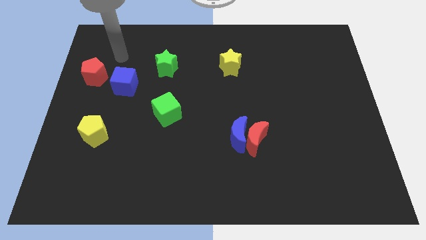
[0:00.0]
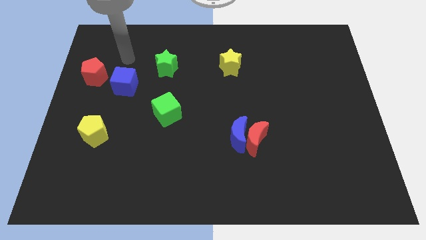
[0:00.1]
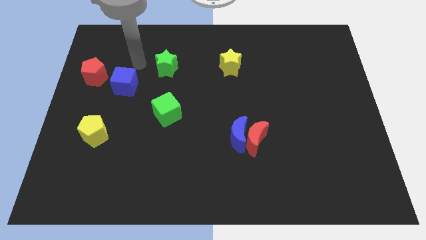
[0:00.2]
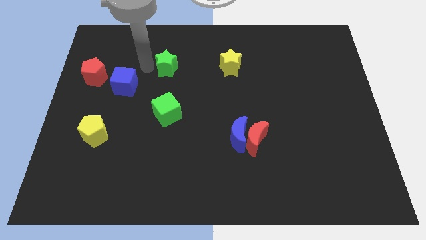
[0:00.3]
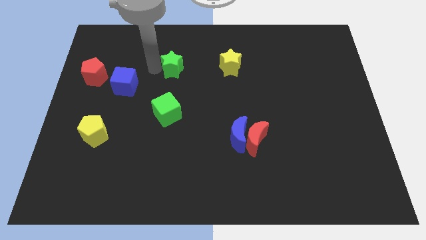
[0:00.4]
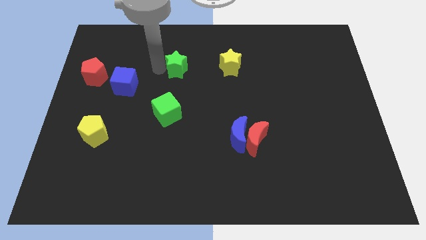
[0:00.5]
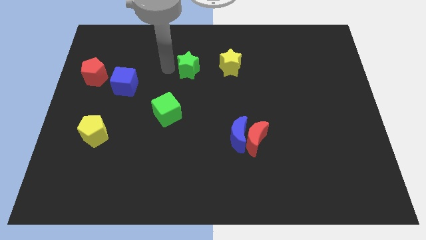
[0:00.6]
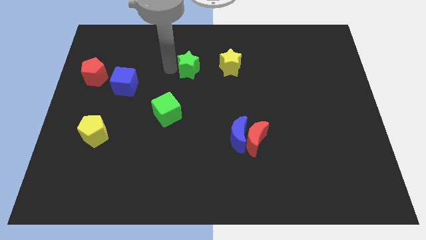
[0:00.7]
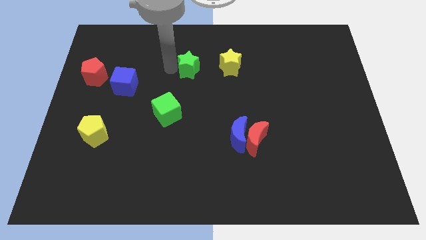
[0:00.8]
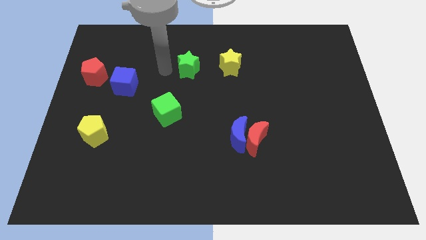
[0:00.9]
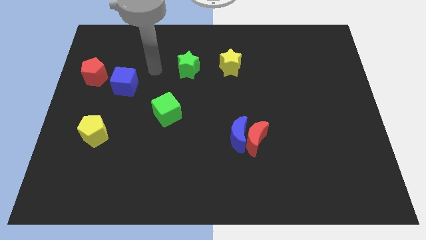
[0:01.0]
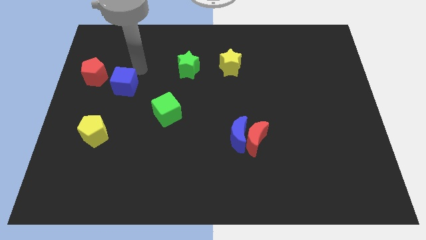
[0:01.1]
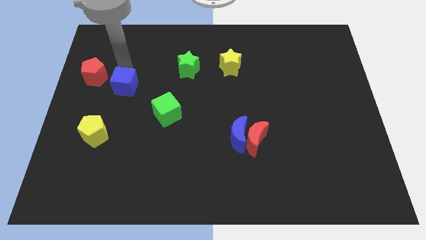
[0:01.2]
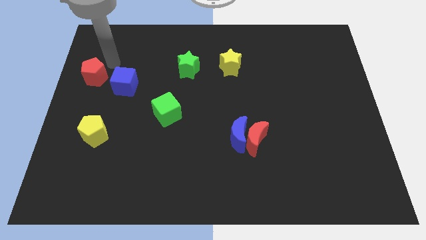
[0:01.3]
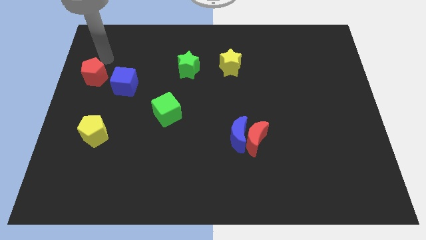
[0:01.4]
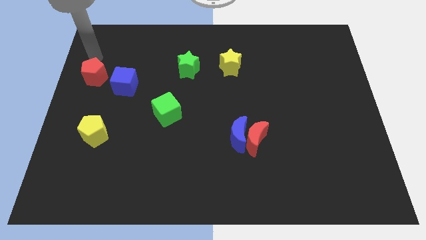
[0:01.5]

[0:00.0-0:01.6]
push green star a bit right towards the yellow star

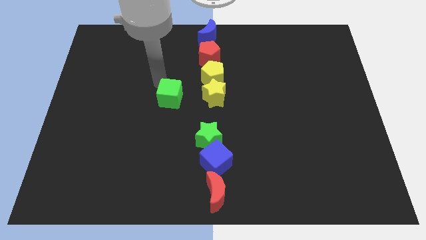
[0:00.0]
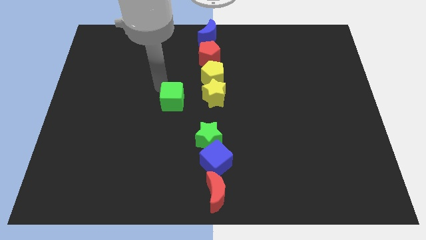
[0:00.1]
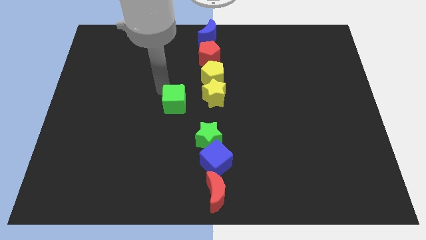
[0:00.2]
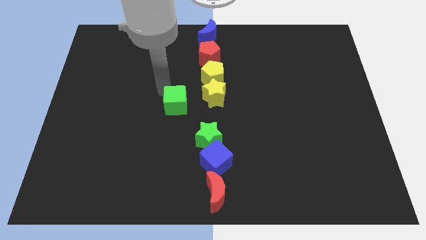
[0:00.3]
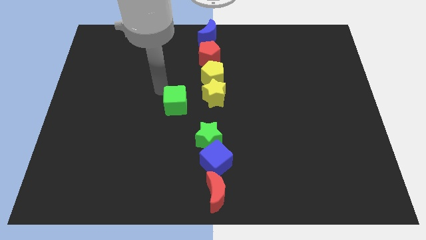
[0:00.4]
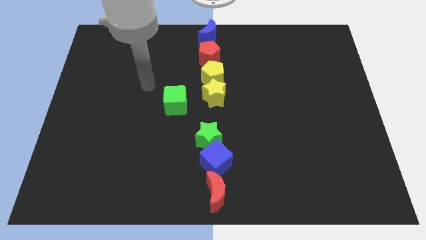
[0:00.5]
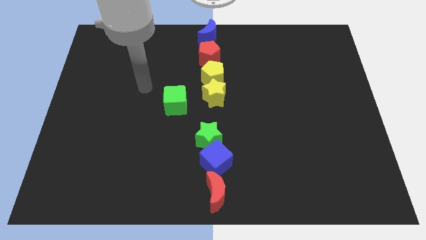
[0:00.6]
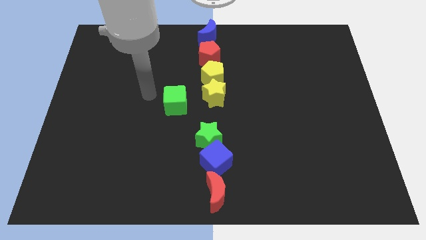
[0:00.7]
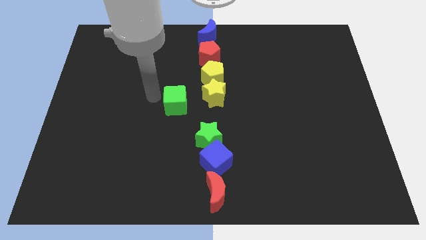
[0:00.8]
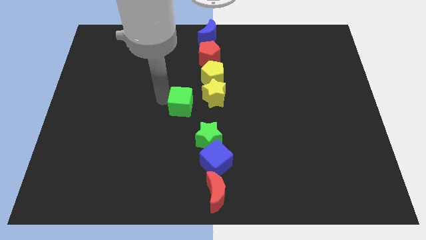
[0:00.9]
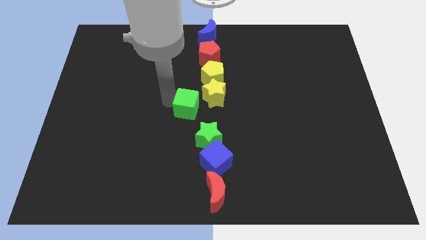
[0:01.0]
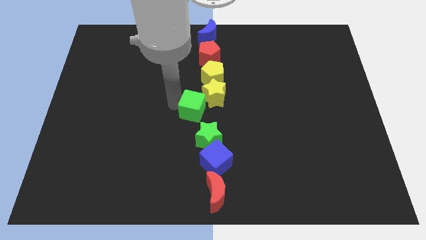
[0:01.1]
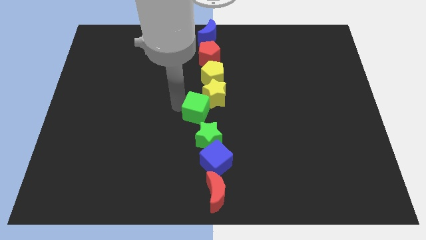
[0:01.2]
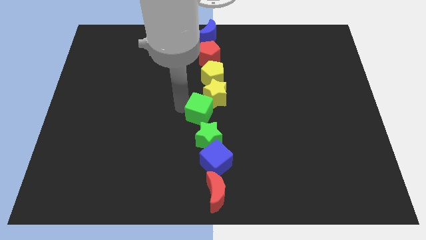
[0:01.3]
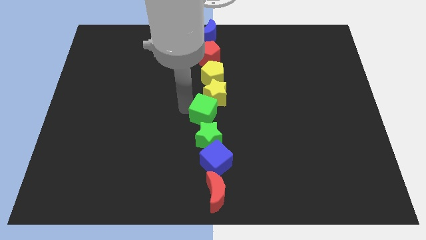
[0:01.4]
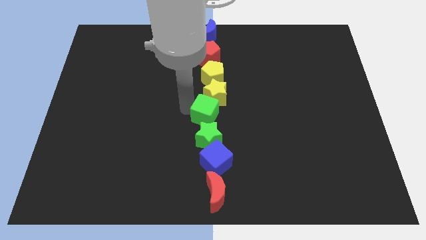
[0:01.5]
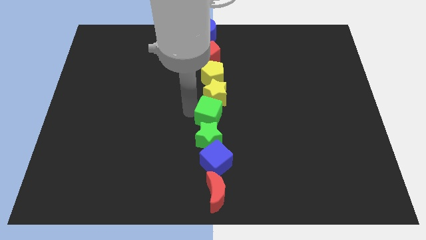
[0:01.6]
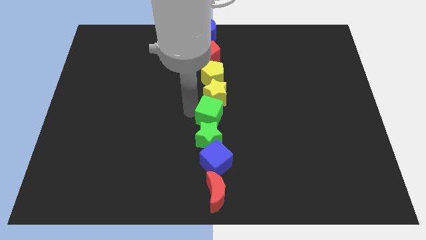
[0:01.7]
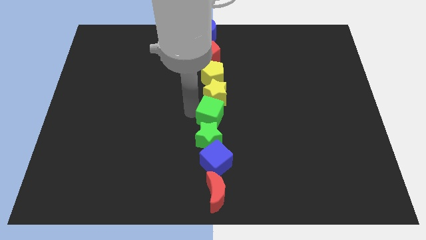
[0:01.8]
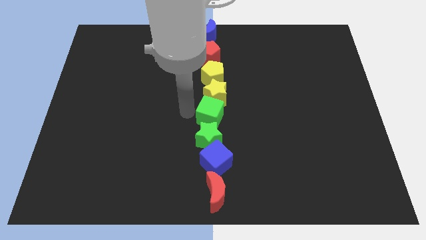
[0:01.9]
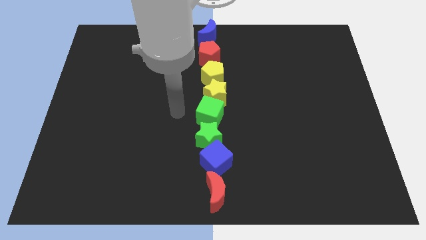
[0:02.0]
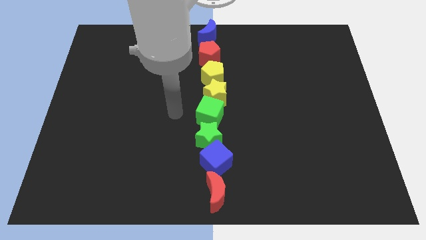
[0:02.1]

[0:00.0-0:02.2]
move the green cube to the center of the board

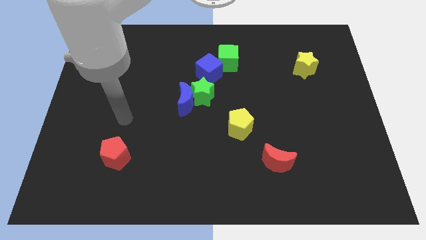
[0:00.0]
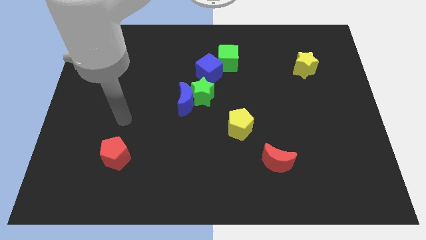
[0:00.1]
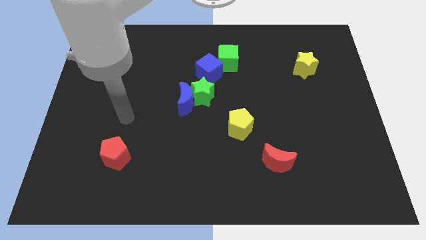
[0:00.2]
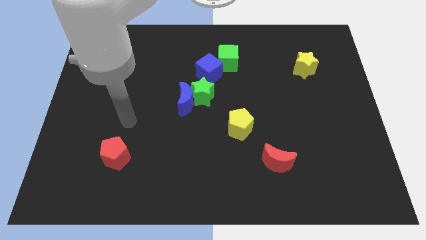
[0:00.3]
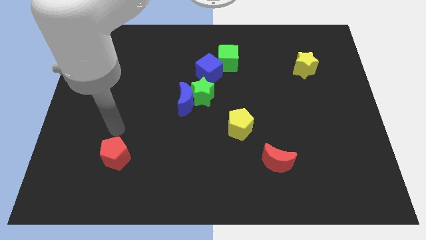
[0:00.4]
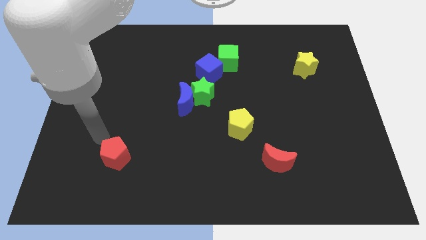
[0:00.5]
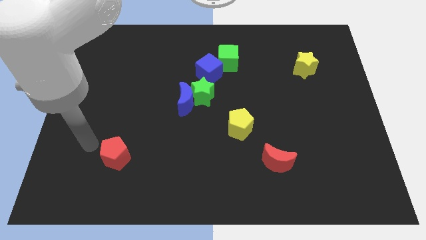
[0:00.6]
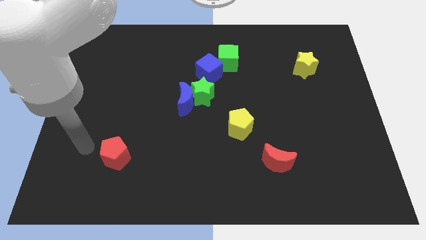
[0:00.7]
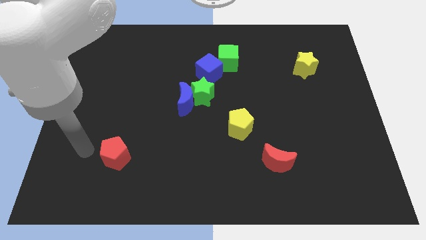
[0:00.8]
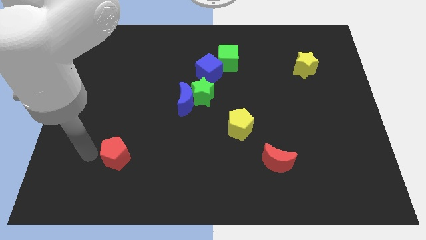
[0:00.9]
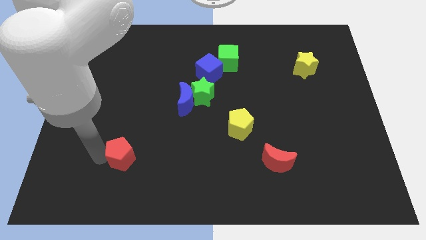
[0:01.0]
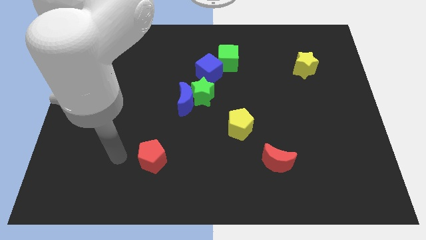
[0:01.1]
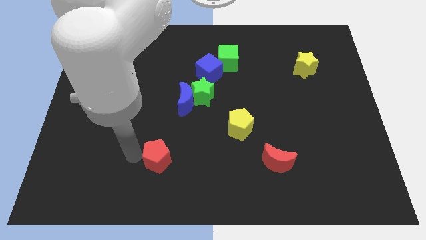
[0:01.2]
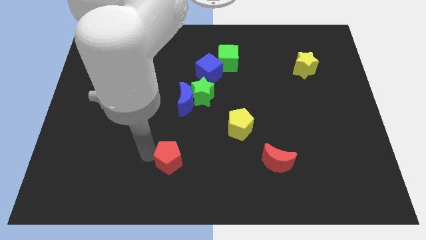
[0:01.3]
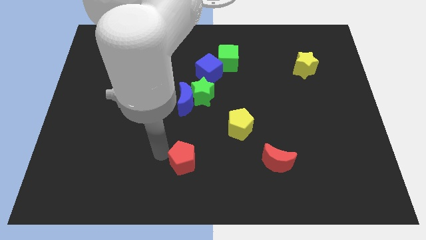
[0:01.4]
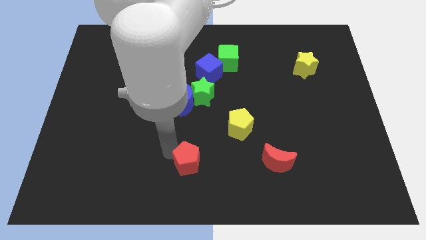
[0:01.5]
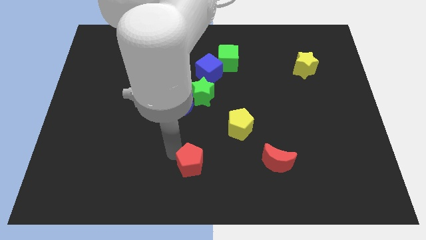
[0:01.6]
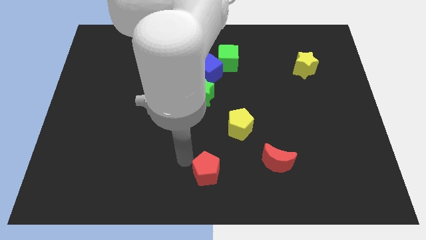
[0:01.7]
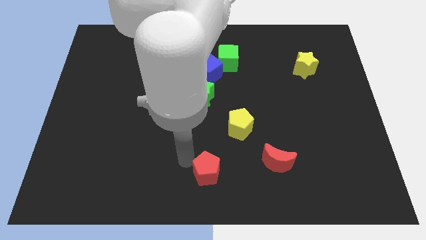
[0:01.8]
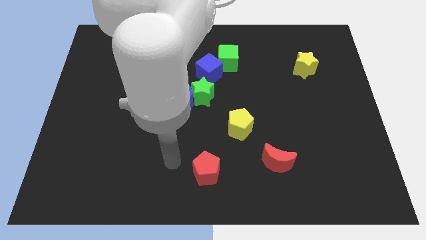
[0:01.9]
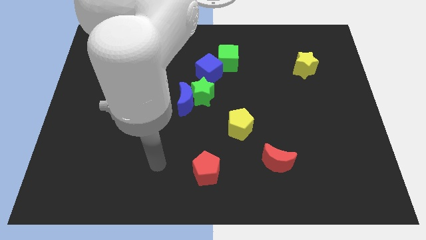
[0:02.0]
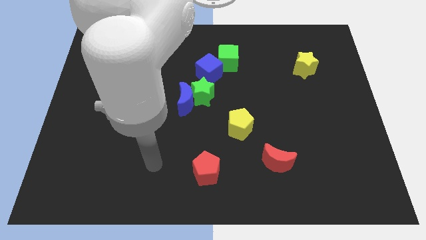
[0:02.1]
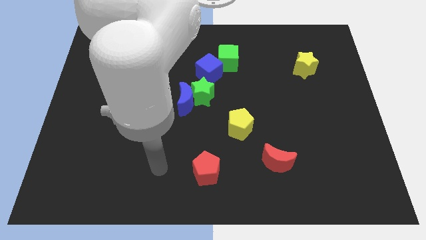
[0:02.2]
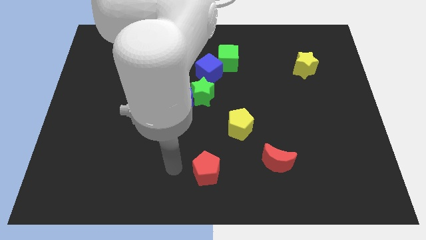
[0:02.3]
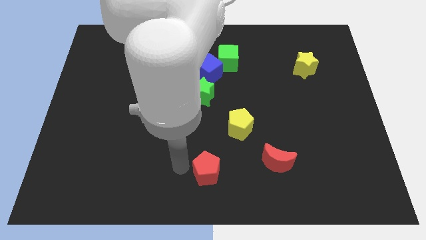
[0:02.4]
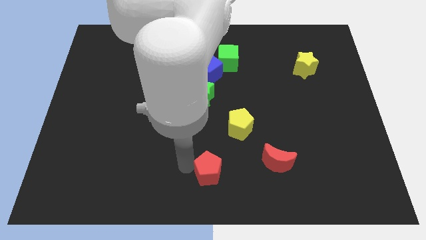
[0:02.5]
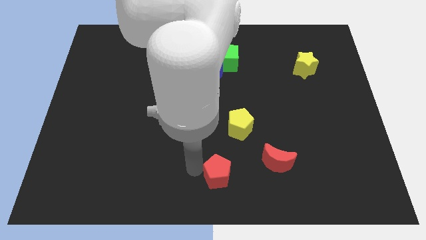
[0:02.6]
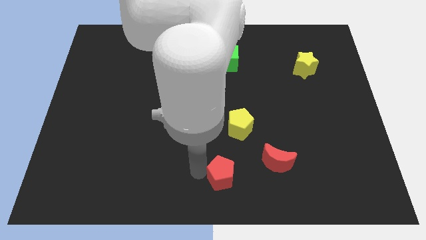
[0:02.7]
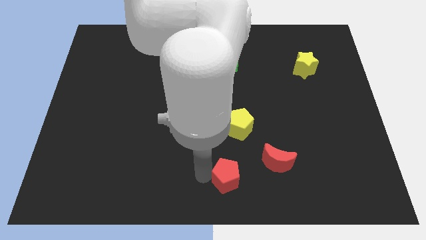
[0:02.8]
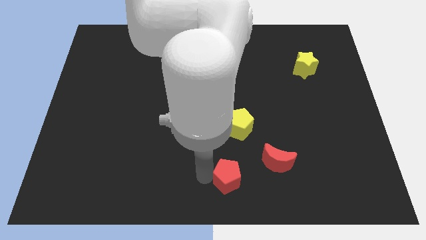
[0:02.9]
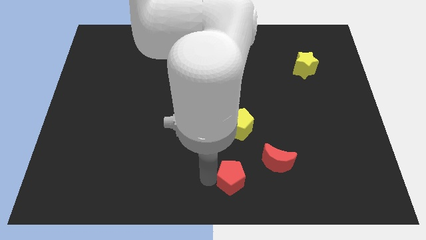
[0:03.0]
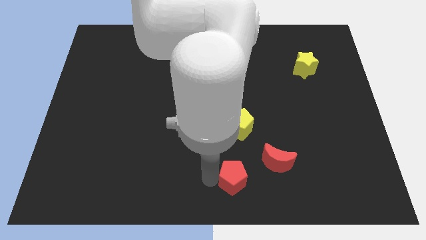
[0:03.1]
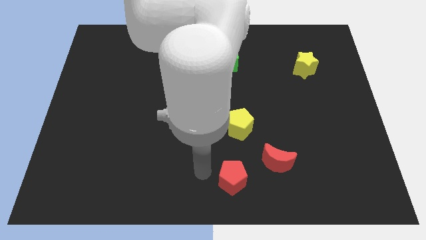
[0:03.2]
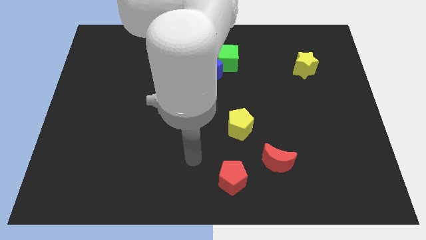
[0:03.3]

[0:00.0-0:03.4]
push the red pentagon to the bottom of the yellow pentagon

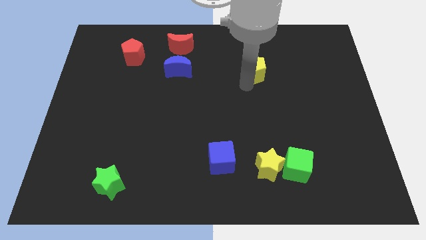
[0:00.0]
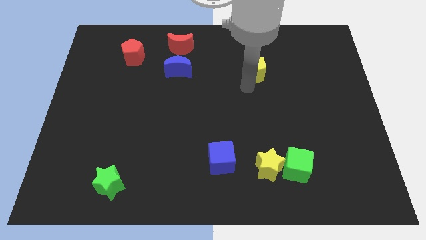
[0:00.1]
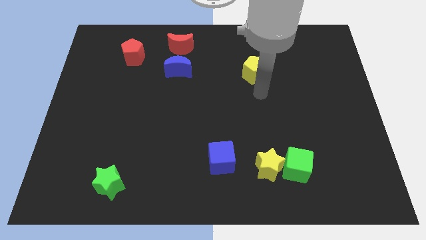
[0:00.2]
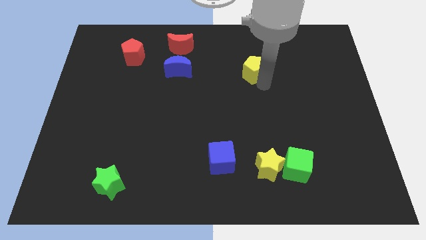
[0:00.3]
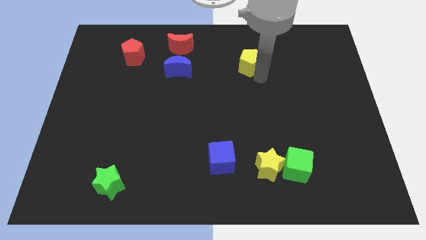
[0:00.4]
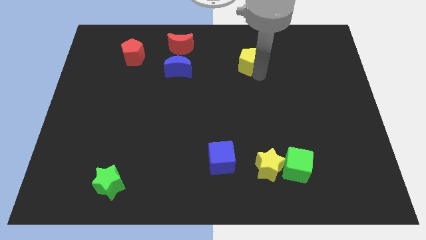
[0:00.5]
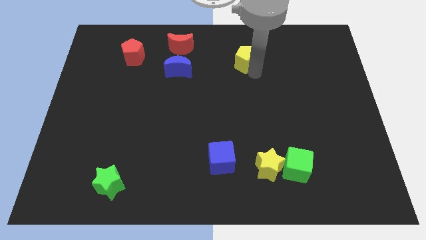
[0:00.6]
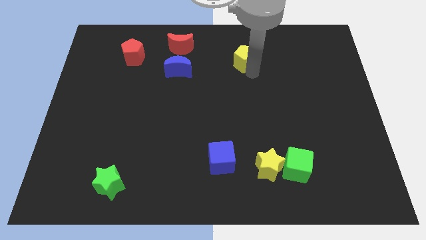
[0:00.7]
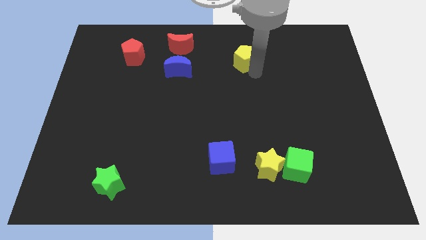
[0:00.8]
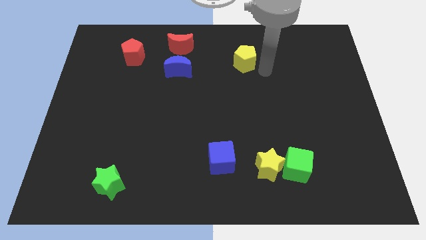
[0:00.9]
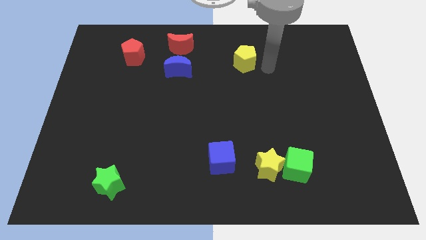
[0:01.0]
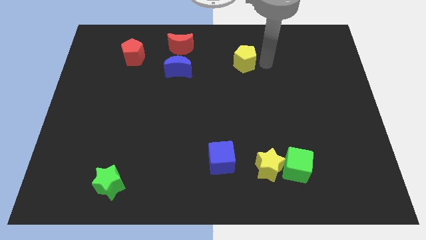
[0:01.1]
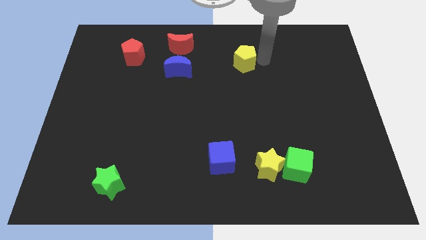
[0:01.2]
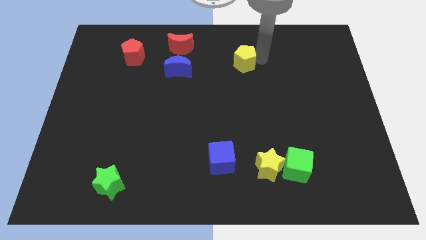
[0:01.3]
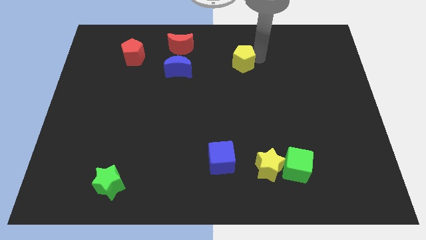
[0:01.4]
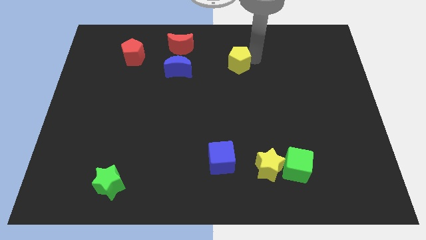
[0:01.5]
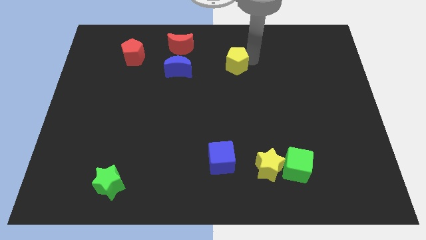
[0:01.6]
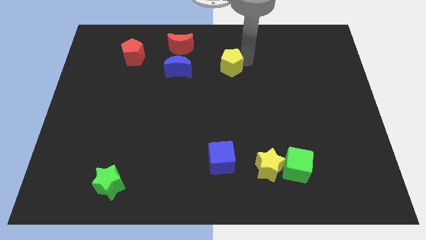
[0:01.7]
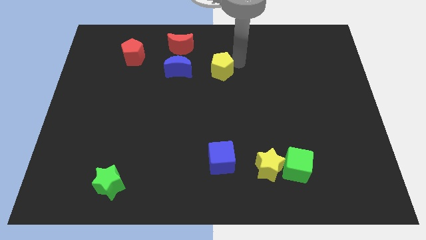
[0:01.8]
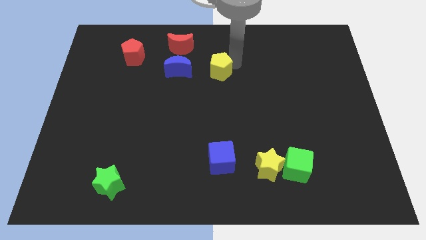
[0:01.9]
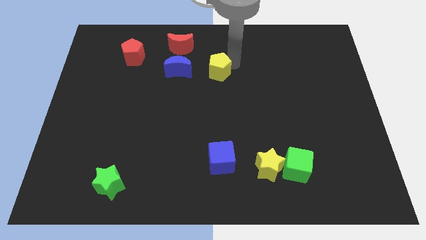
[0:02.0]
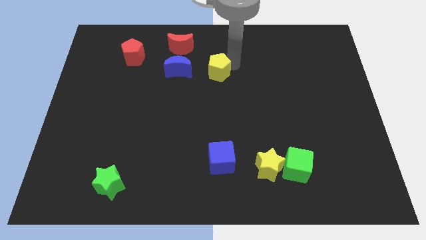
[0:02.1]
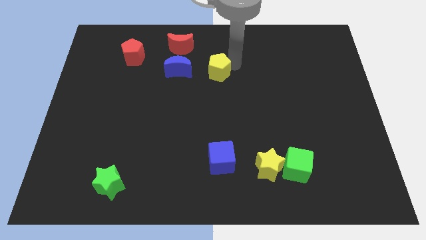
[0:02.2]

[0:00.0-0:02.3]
push the yellow pentagon to the right of the blue crescent
